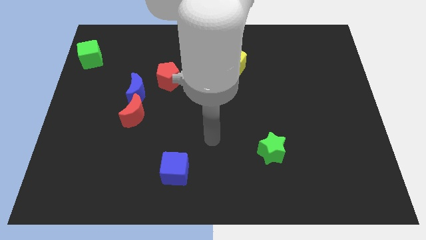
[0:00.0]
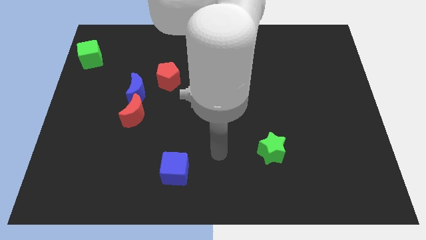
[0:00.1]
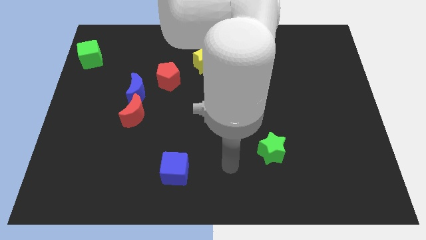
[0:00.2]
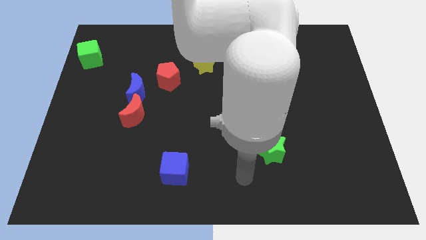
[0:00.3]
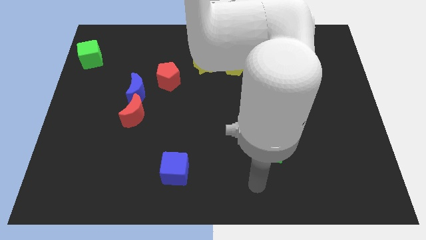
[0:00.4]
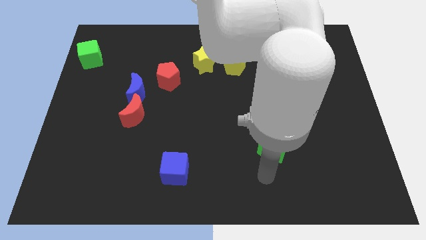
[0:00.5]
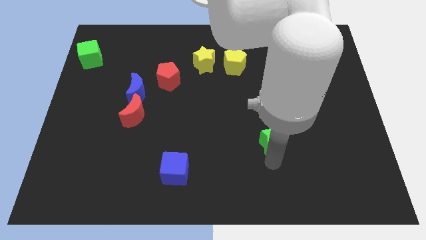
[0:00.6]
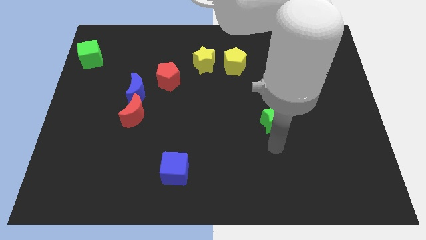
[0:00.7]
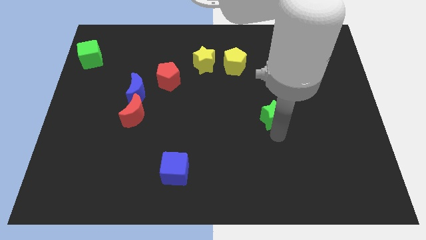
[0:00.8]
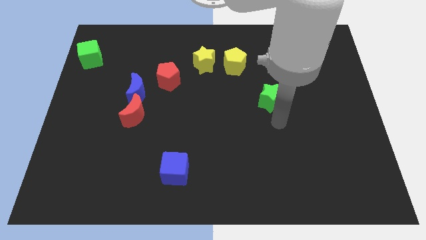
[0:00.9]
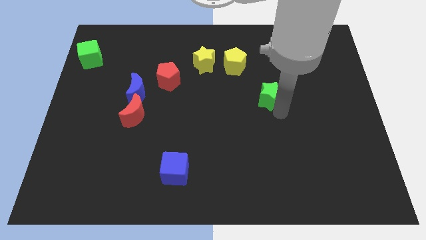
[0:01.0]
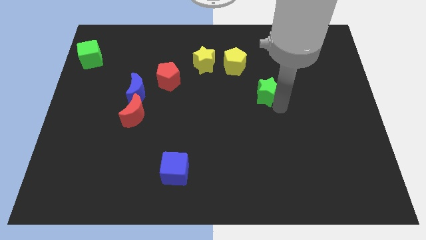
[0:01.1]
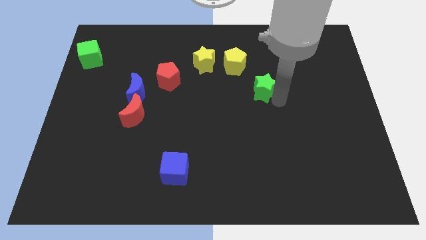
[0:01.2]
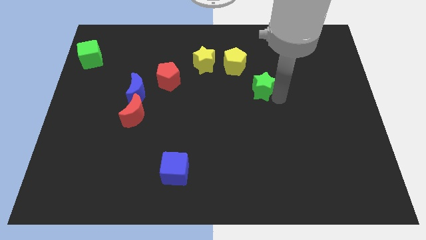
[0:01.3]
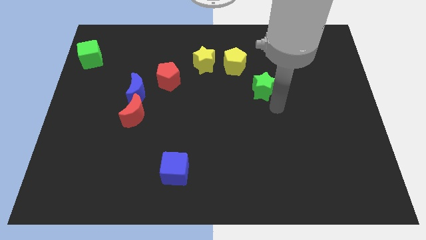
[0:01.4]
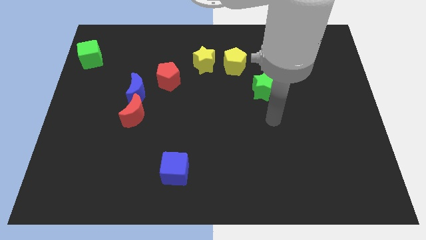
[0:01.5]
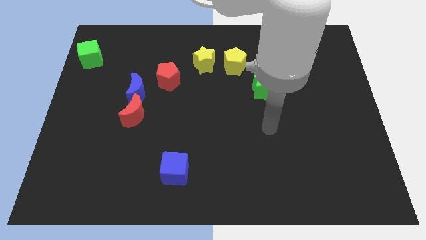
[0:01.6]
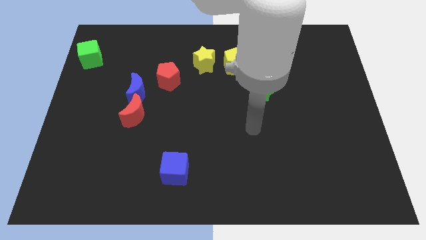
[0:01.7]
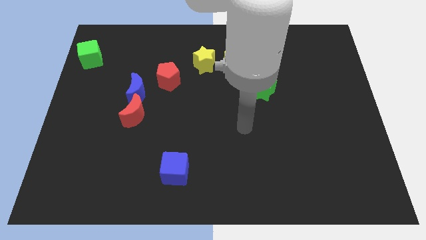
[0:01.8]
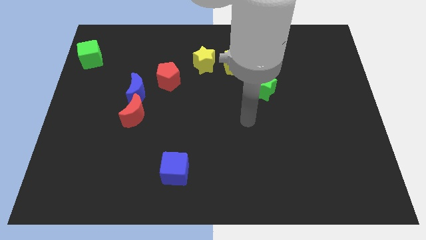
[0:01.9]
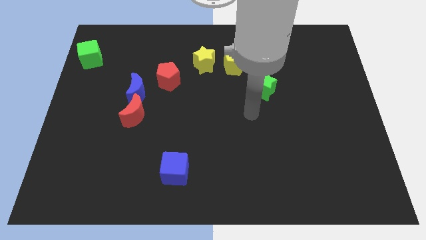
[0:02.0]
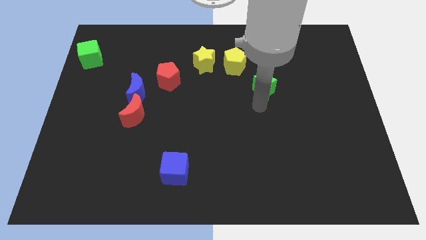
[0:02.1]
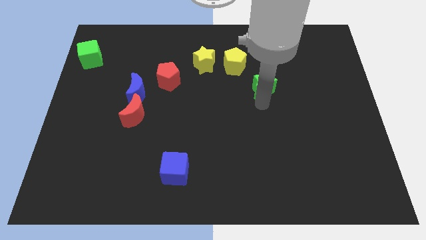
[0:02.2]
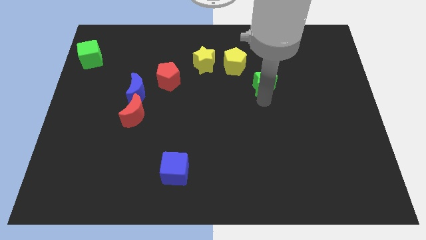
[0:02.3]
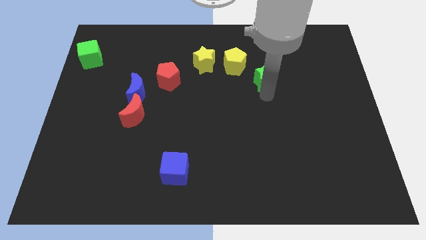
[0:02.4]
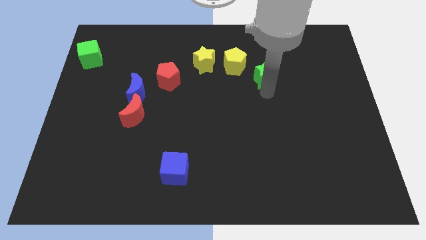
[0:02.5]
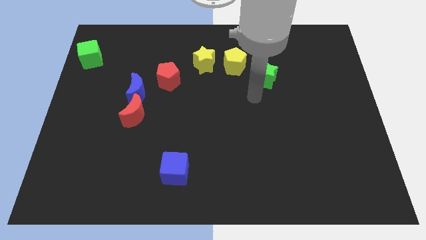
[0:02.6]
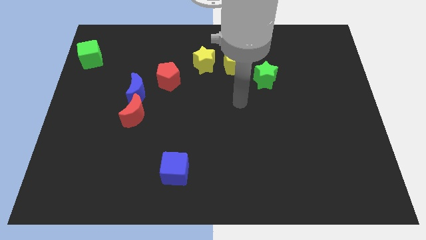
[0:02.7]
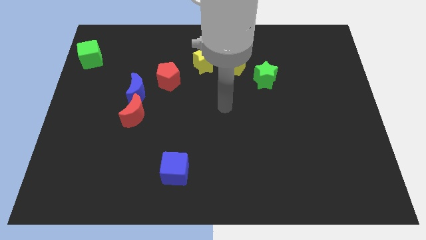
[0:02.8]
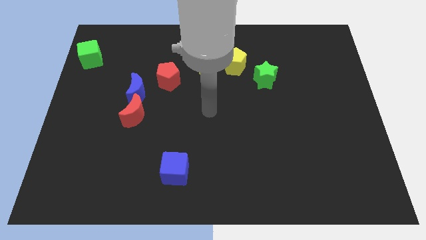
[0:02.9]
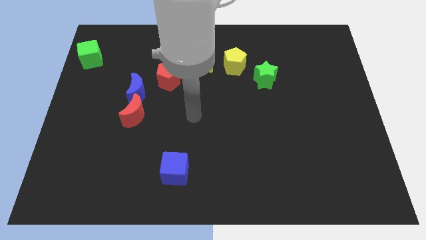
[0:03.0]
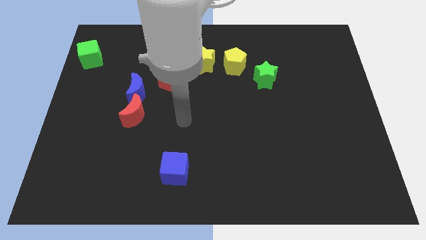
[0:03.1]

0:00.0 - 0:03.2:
push green star towards the yellow pentagon

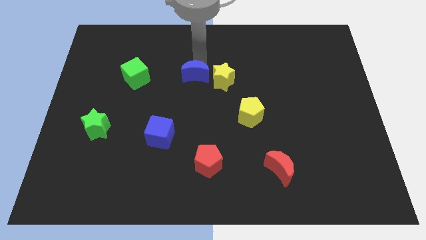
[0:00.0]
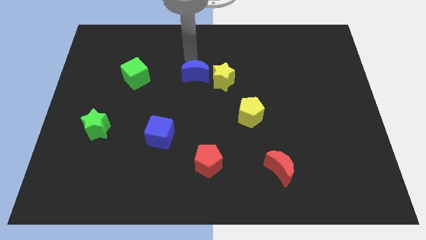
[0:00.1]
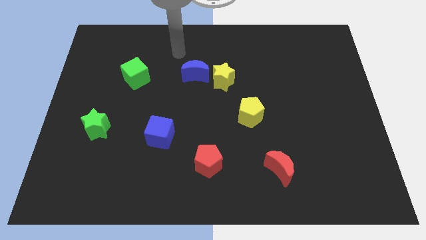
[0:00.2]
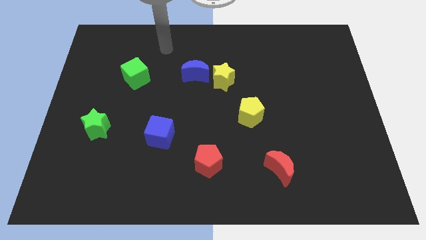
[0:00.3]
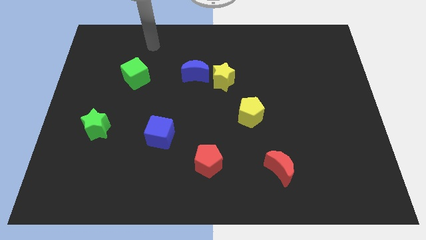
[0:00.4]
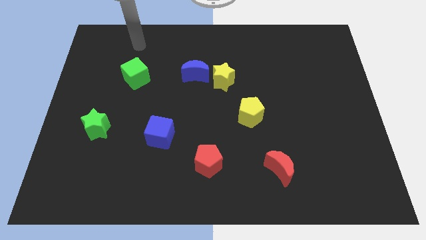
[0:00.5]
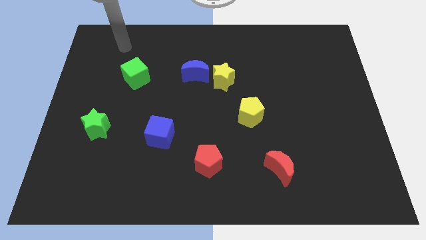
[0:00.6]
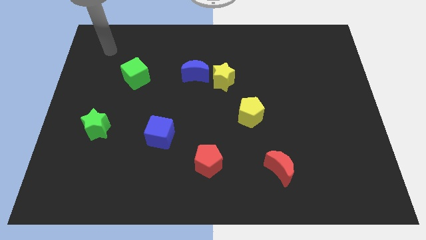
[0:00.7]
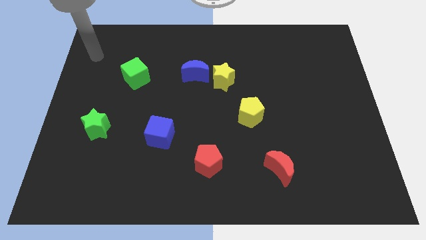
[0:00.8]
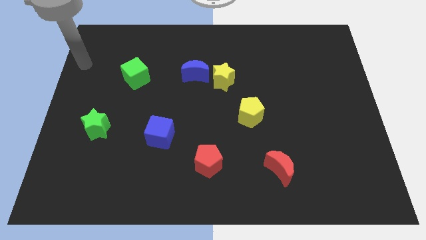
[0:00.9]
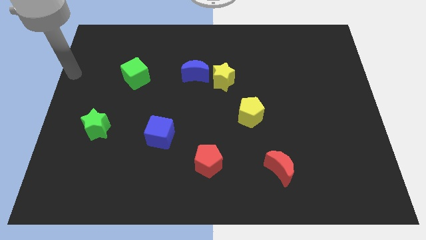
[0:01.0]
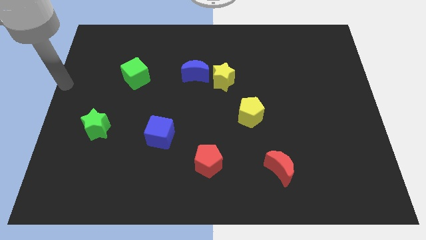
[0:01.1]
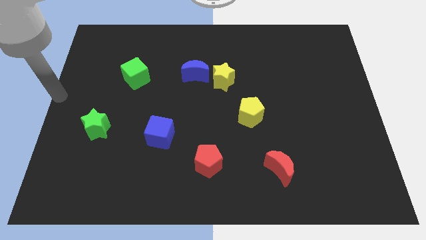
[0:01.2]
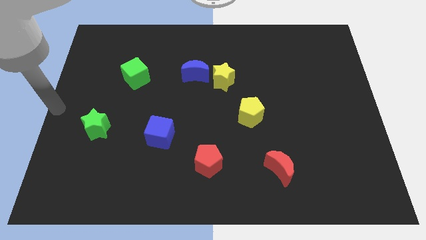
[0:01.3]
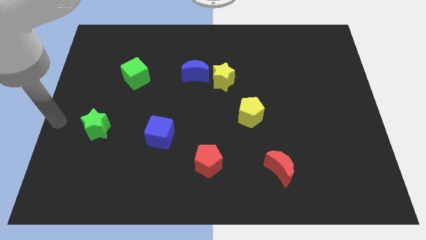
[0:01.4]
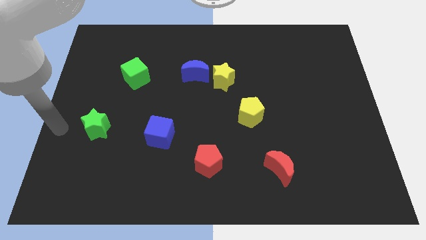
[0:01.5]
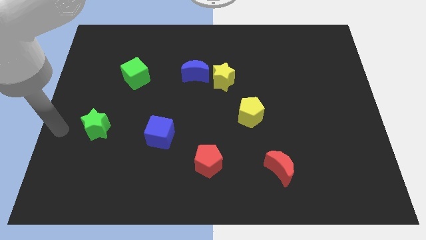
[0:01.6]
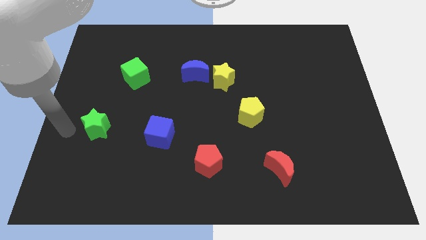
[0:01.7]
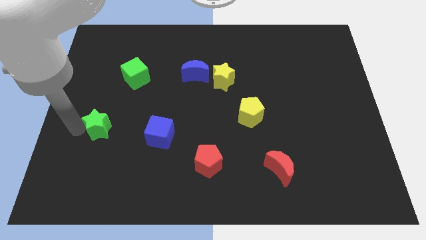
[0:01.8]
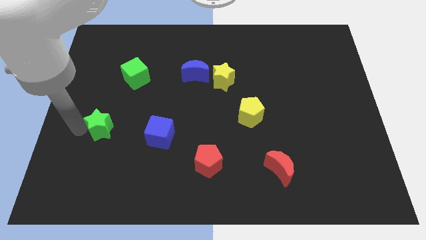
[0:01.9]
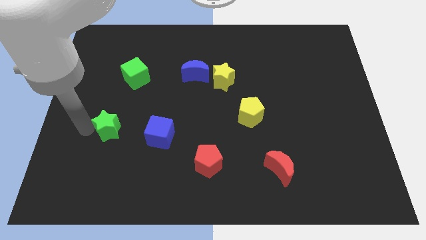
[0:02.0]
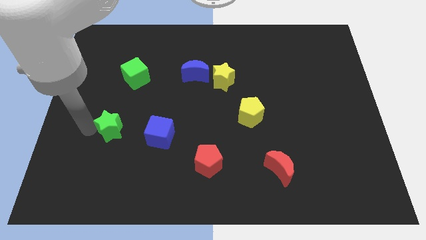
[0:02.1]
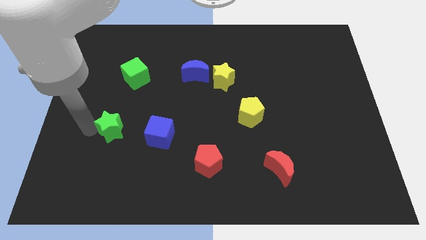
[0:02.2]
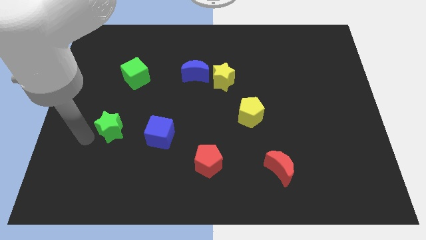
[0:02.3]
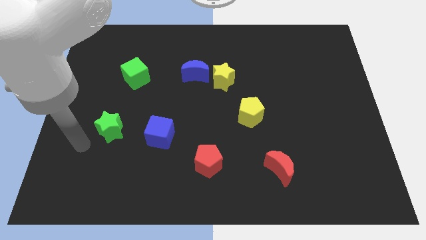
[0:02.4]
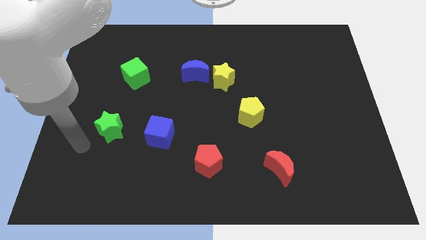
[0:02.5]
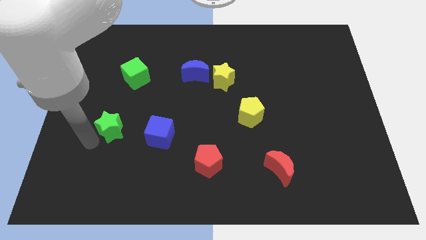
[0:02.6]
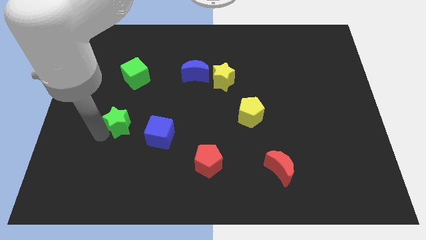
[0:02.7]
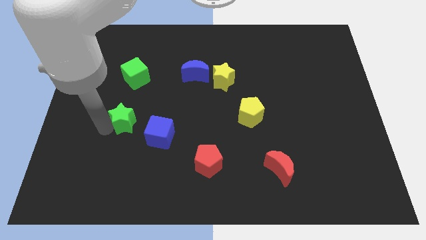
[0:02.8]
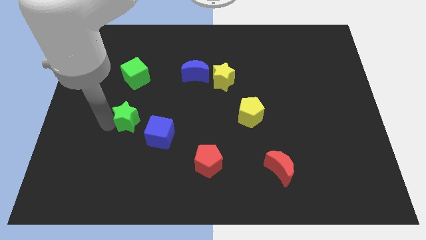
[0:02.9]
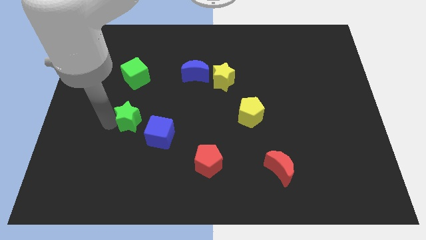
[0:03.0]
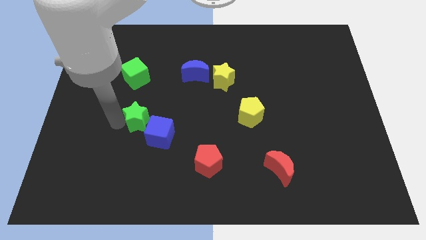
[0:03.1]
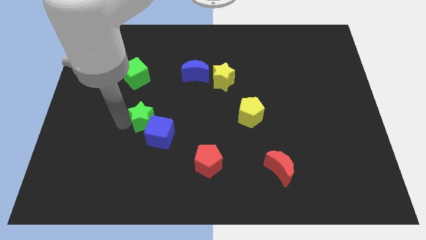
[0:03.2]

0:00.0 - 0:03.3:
place the green star vertically below the green cube

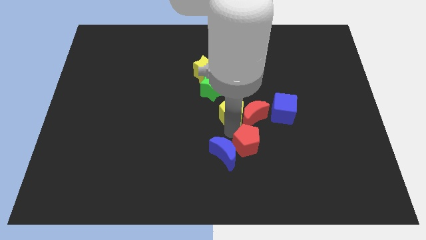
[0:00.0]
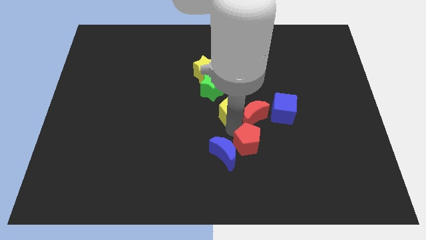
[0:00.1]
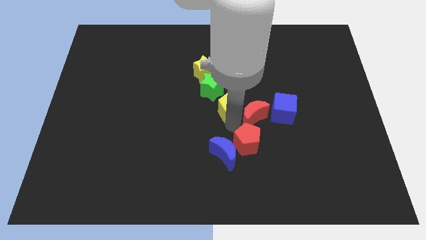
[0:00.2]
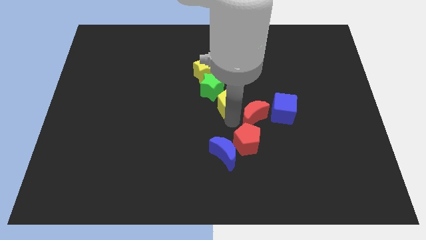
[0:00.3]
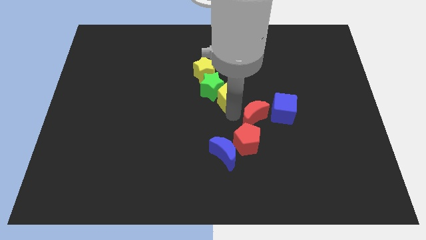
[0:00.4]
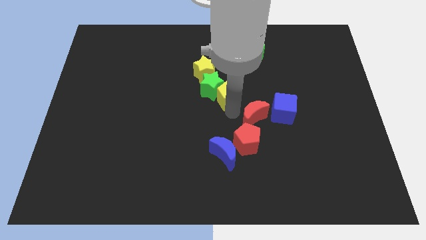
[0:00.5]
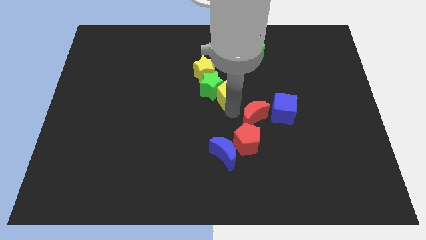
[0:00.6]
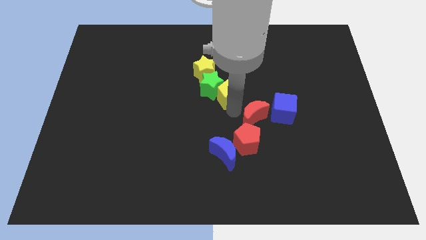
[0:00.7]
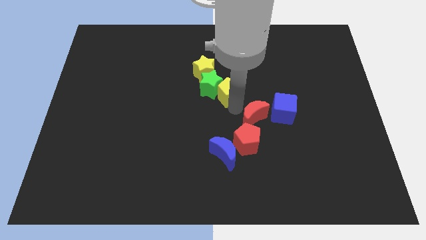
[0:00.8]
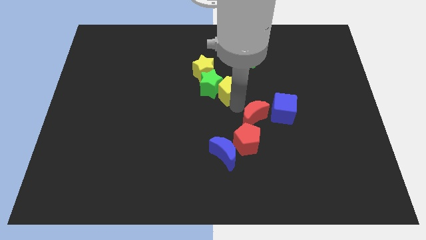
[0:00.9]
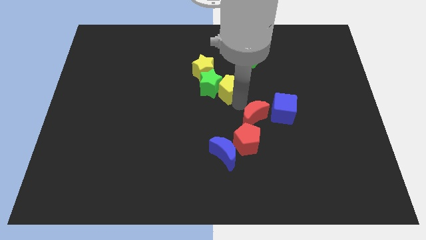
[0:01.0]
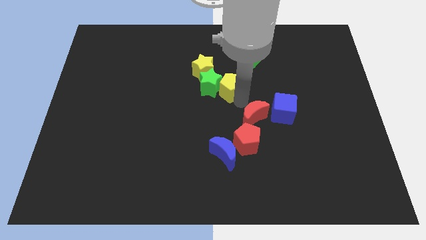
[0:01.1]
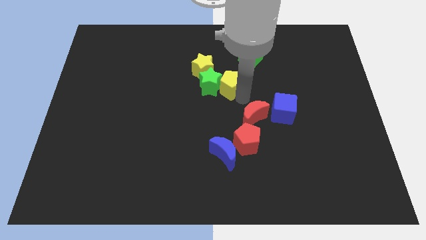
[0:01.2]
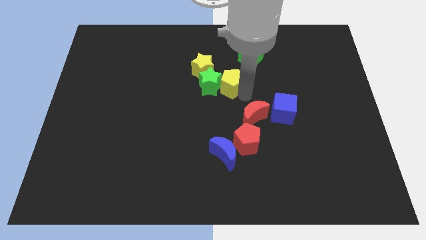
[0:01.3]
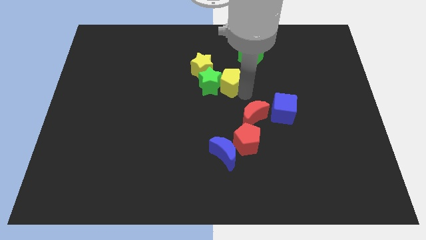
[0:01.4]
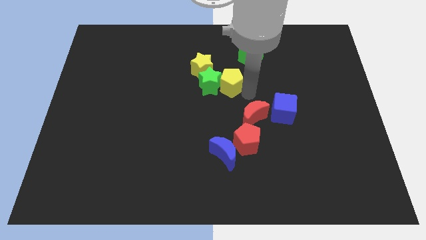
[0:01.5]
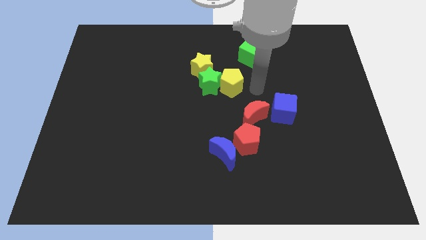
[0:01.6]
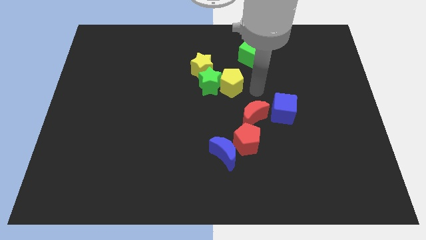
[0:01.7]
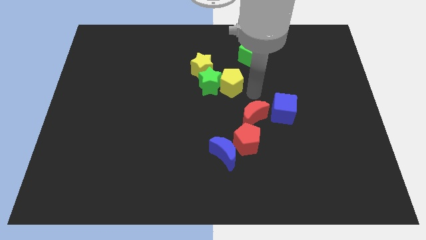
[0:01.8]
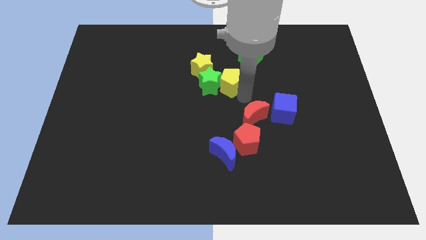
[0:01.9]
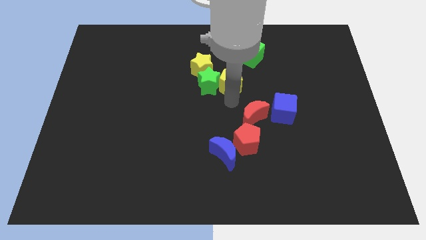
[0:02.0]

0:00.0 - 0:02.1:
move the yellow pentagon to the right of the green star

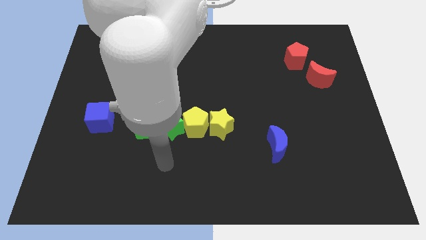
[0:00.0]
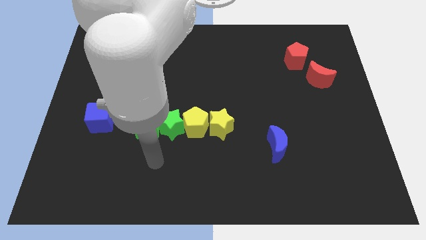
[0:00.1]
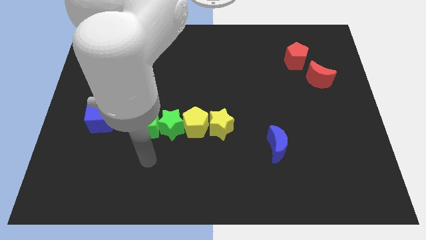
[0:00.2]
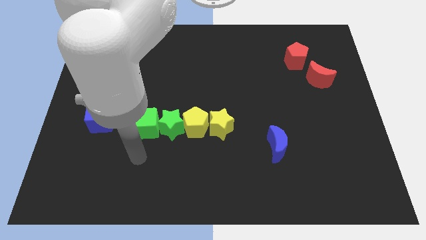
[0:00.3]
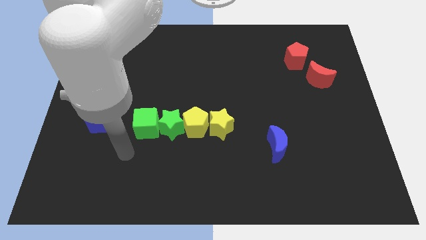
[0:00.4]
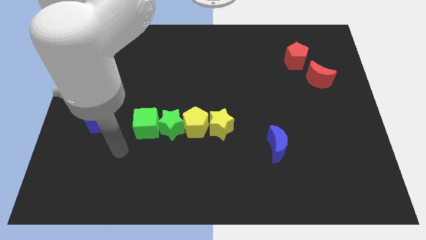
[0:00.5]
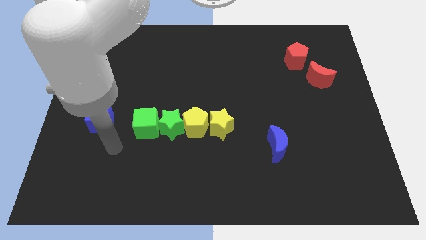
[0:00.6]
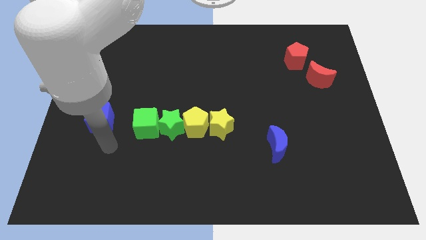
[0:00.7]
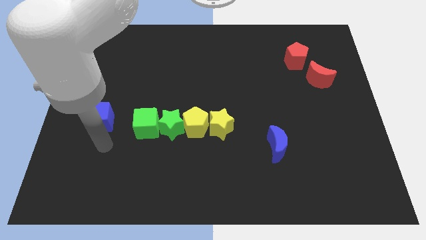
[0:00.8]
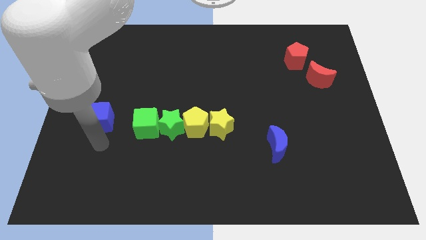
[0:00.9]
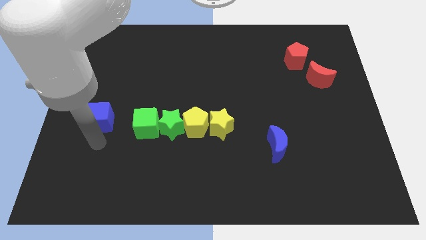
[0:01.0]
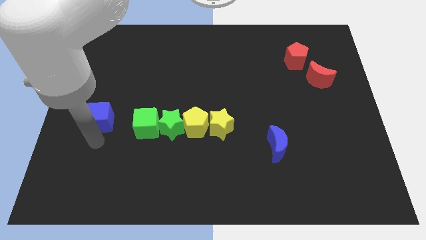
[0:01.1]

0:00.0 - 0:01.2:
move your arm towards the blue cube
